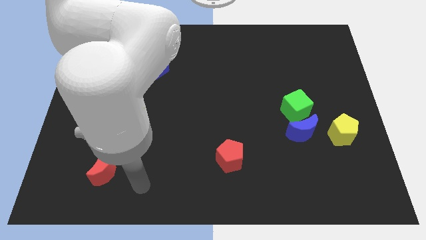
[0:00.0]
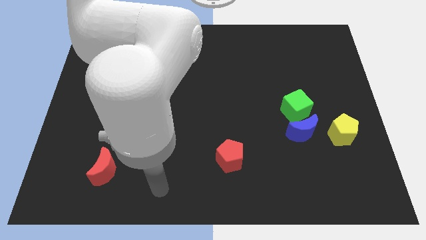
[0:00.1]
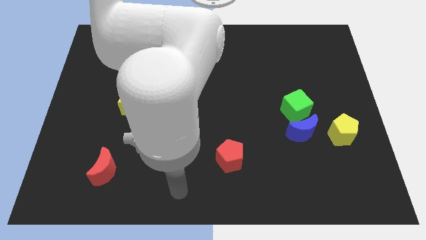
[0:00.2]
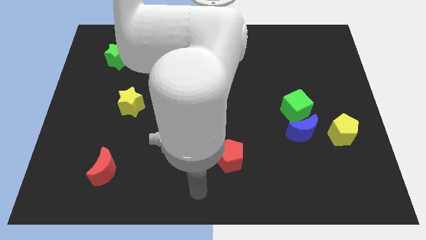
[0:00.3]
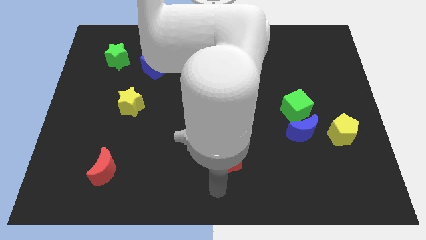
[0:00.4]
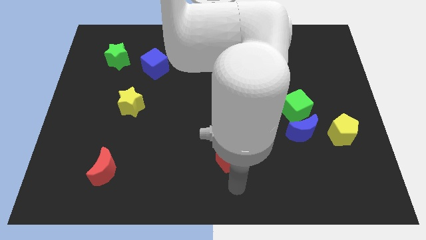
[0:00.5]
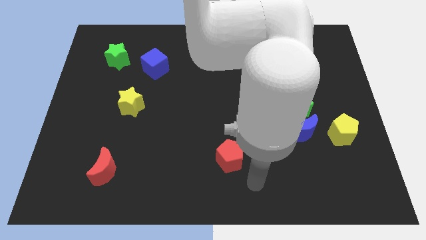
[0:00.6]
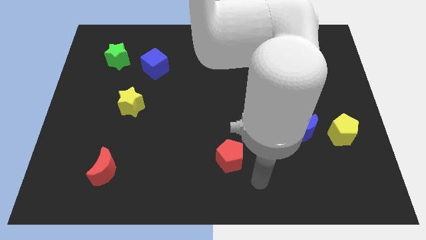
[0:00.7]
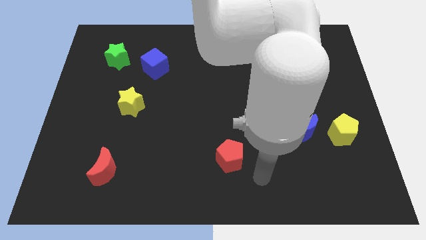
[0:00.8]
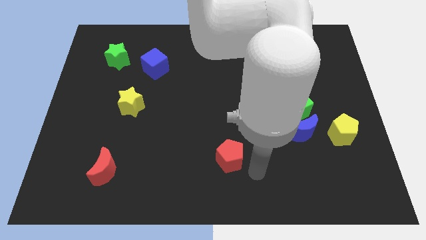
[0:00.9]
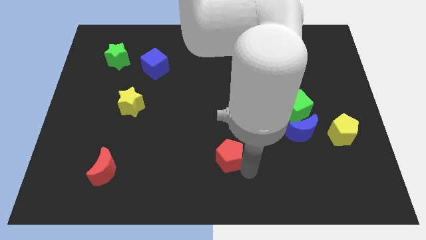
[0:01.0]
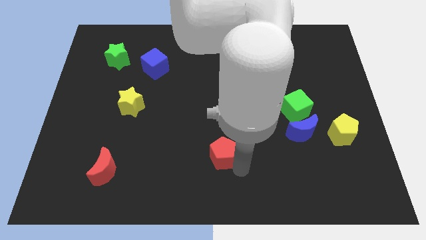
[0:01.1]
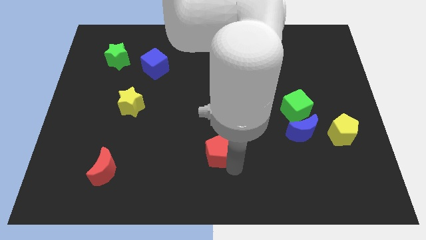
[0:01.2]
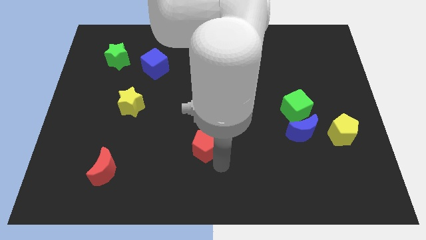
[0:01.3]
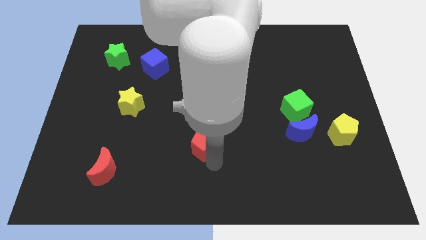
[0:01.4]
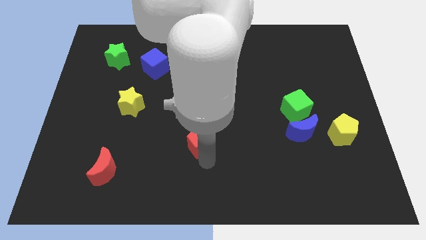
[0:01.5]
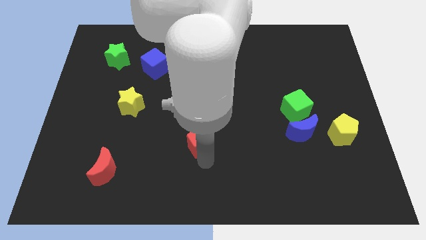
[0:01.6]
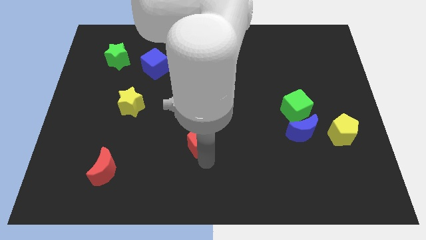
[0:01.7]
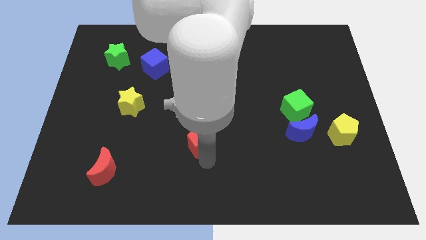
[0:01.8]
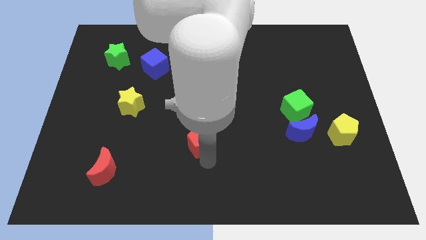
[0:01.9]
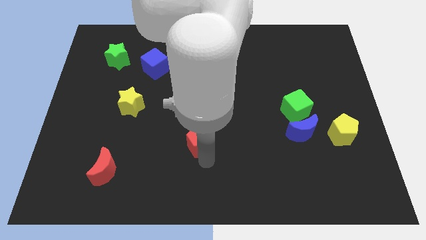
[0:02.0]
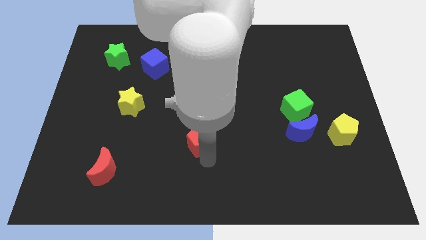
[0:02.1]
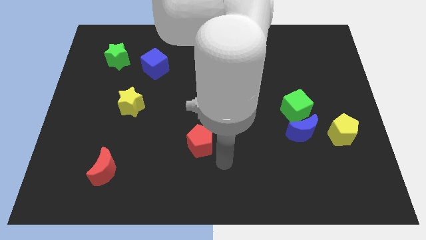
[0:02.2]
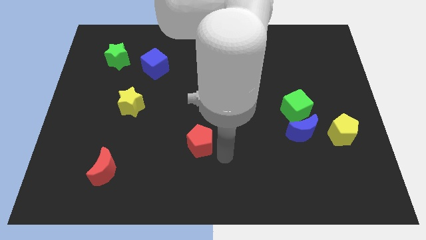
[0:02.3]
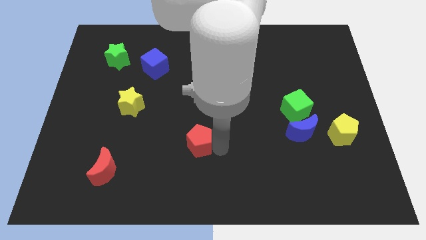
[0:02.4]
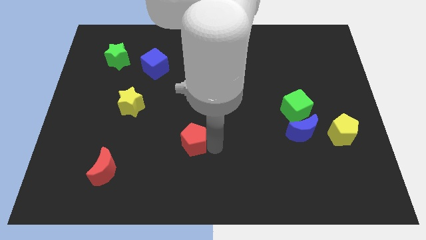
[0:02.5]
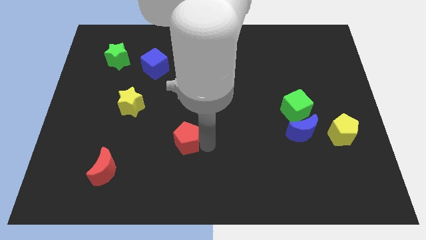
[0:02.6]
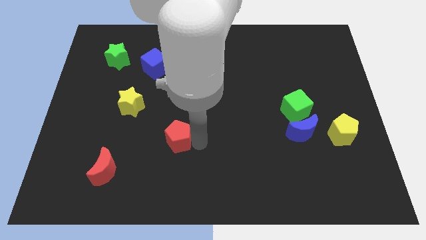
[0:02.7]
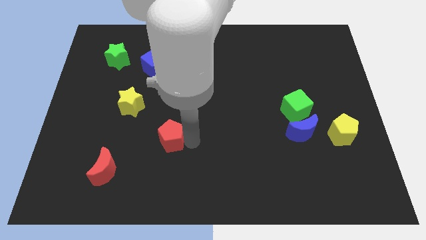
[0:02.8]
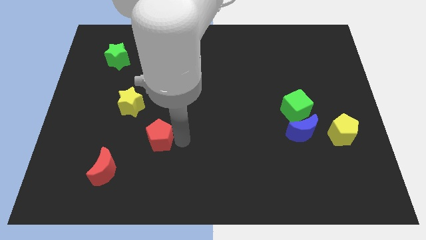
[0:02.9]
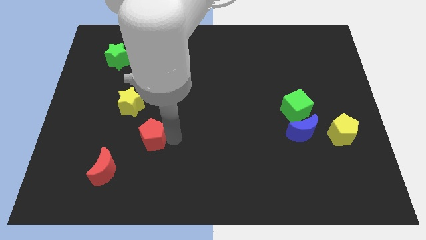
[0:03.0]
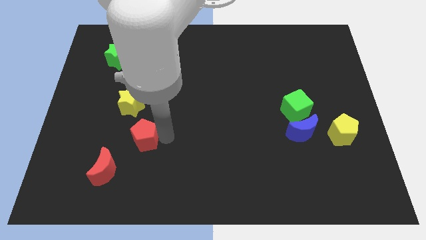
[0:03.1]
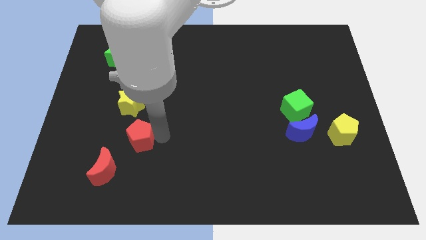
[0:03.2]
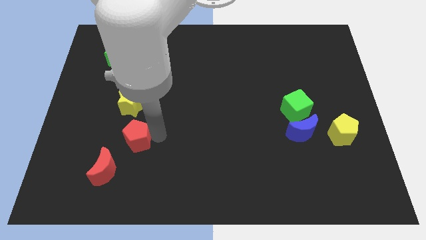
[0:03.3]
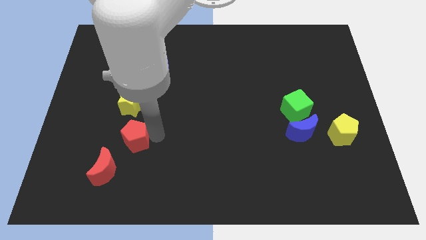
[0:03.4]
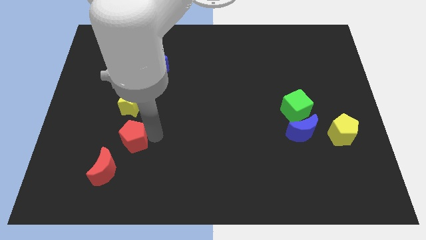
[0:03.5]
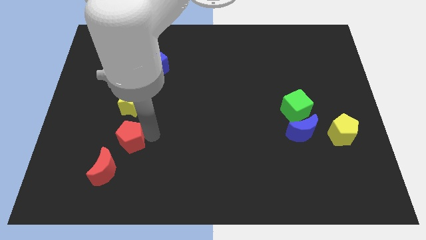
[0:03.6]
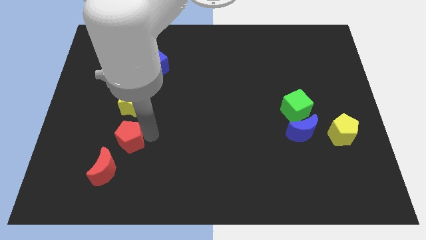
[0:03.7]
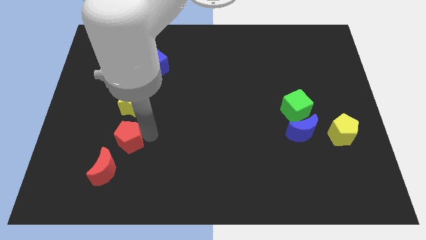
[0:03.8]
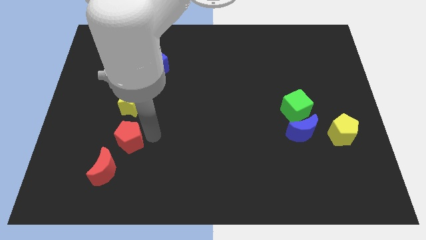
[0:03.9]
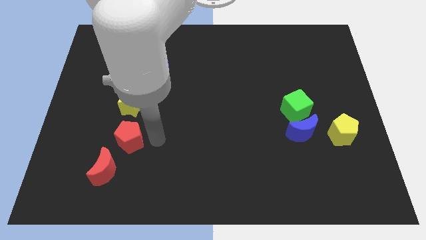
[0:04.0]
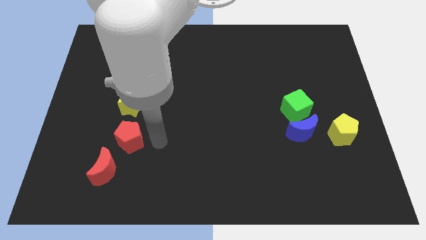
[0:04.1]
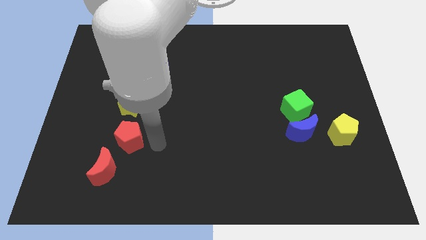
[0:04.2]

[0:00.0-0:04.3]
move the red pentagon to the top side of red crescent

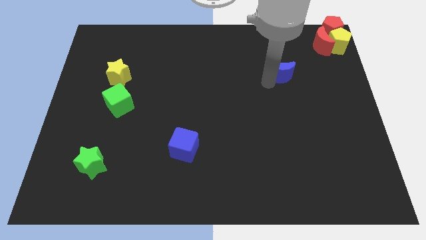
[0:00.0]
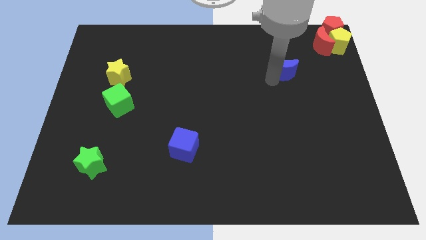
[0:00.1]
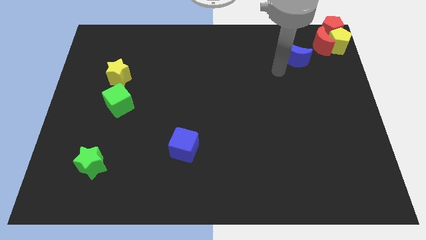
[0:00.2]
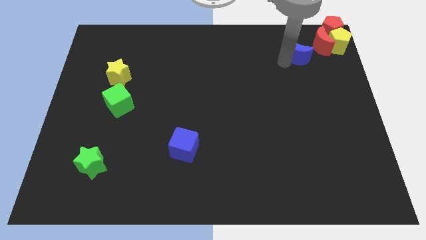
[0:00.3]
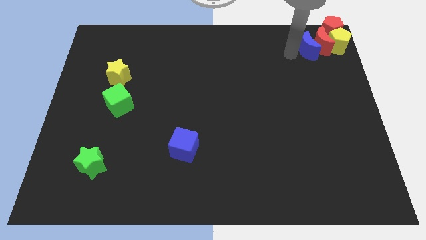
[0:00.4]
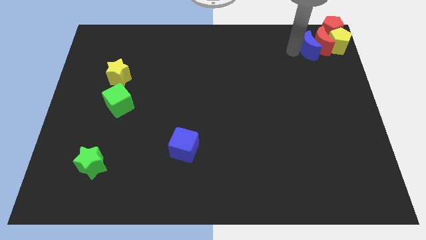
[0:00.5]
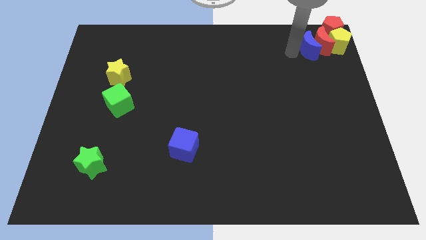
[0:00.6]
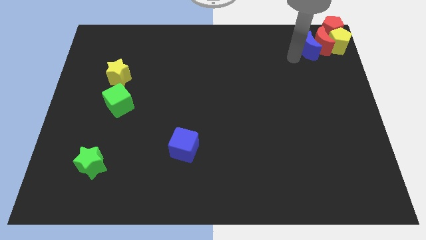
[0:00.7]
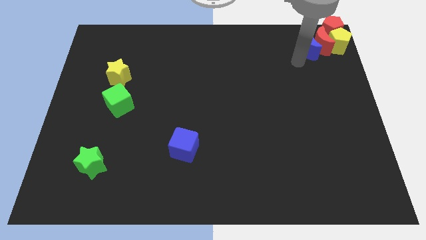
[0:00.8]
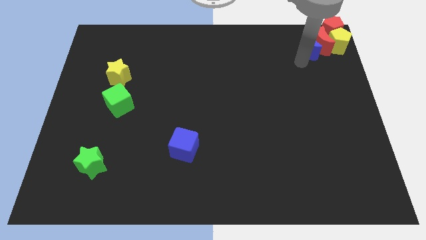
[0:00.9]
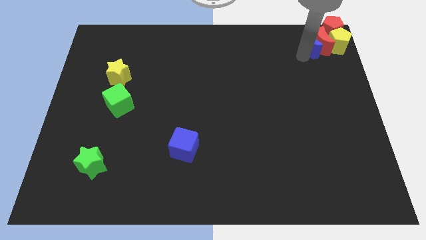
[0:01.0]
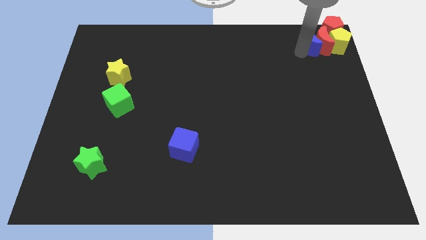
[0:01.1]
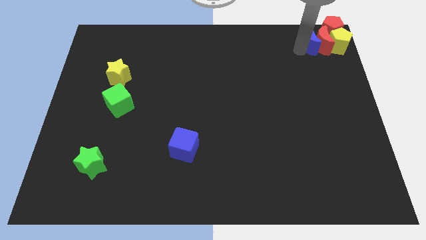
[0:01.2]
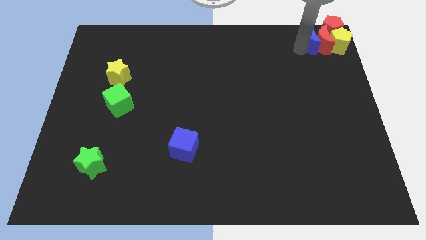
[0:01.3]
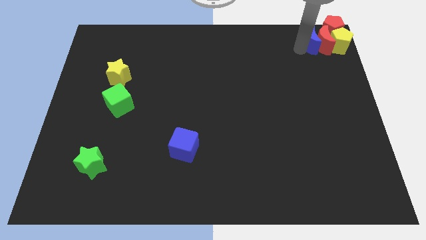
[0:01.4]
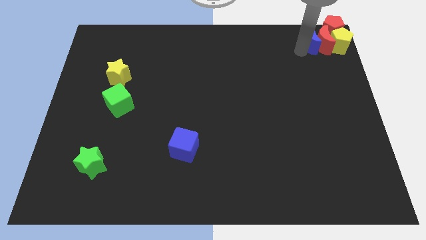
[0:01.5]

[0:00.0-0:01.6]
push the blue crescent to the left of the red crescent

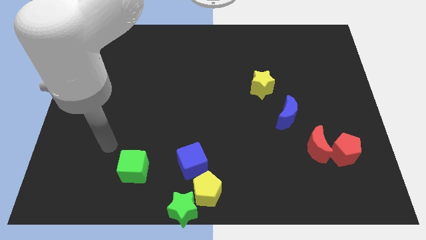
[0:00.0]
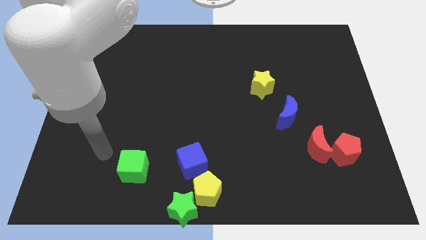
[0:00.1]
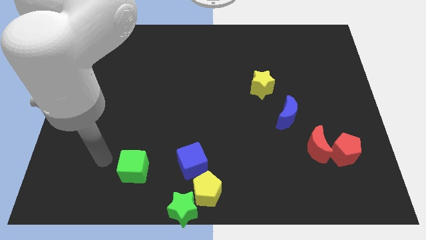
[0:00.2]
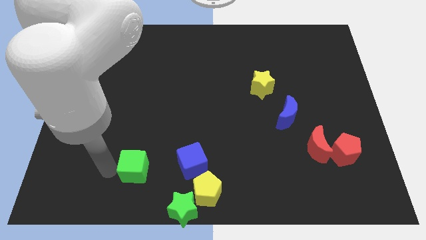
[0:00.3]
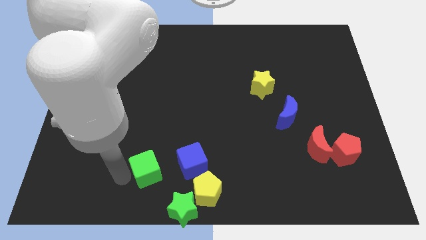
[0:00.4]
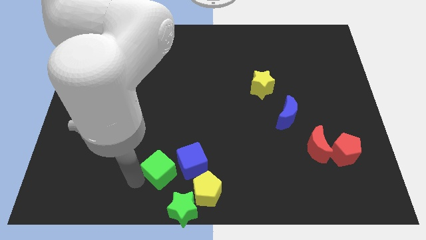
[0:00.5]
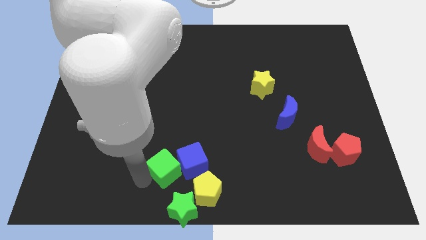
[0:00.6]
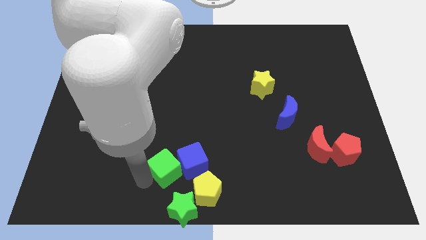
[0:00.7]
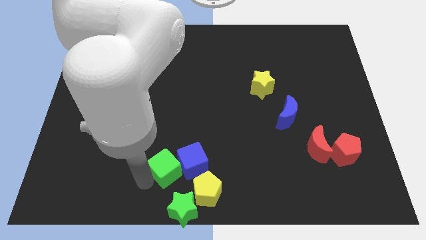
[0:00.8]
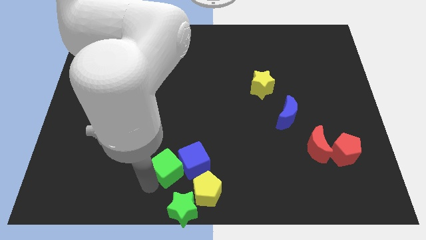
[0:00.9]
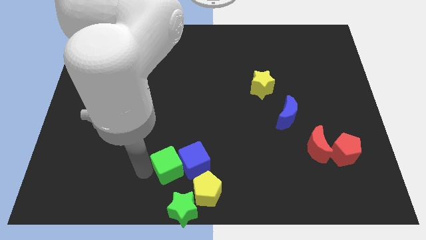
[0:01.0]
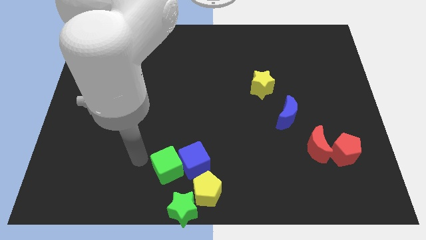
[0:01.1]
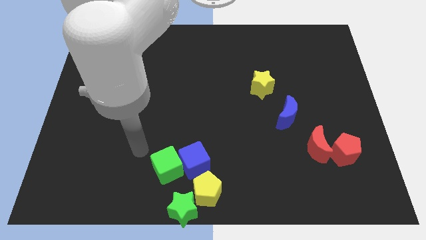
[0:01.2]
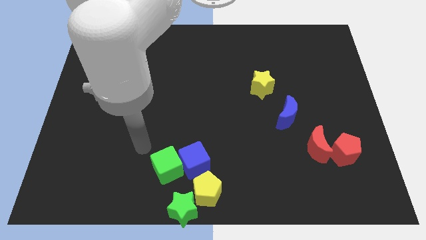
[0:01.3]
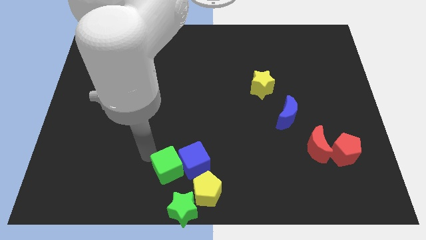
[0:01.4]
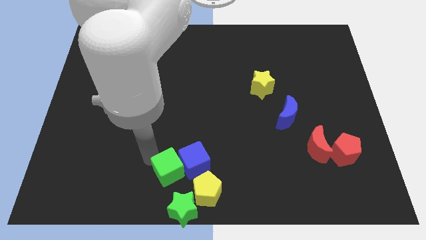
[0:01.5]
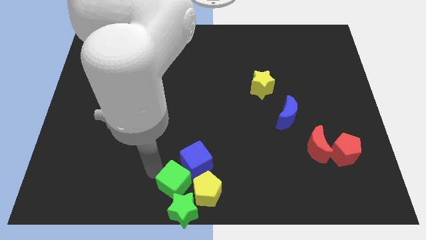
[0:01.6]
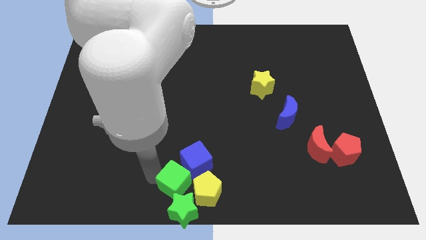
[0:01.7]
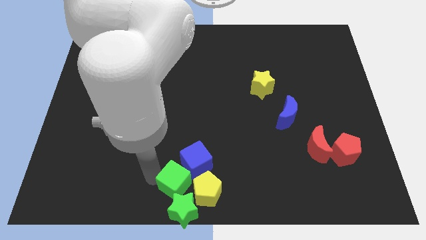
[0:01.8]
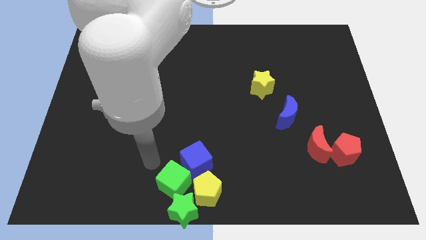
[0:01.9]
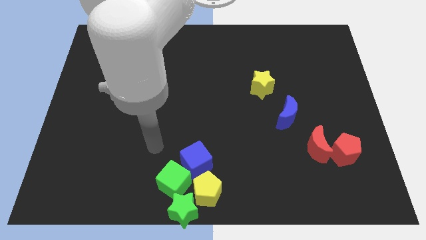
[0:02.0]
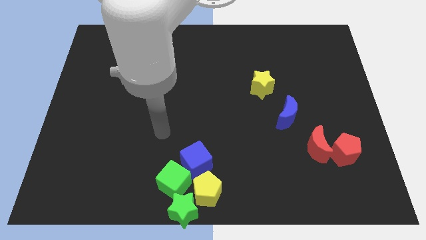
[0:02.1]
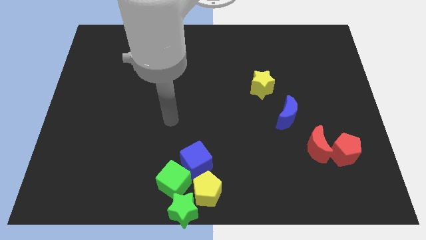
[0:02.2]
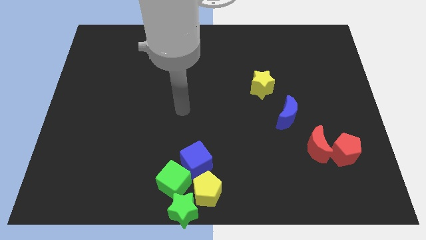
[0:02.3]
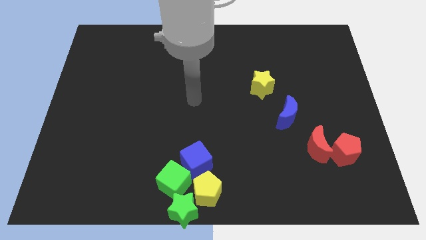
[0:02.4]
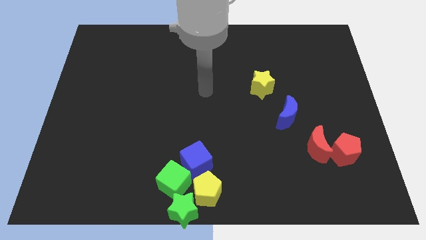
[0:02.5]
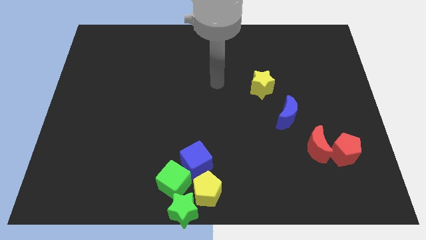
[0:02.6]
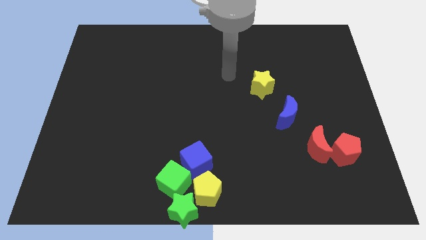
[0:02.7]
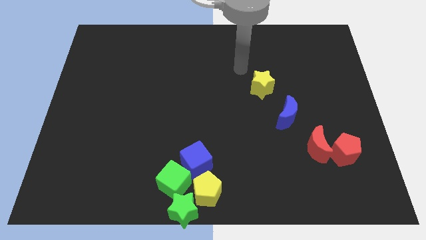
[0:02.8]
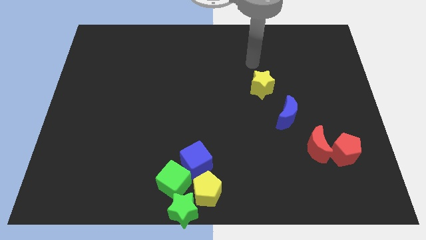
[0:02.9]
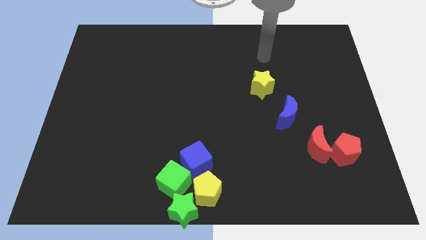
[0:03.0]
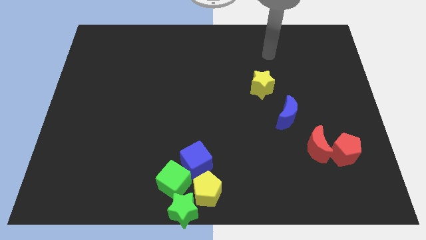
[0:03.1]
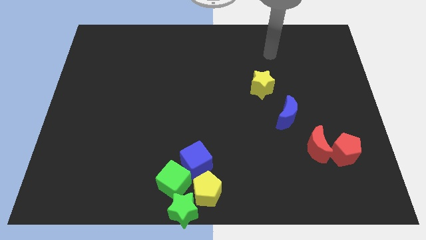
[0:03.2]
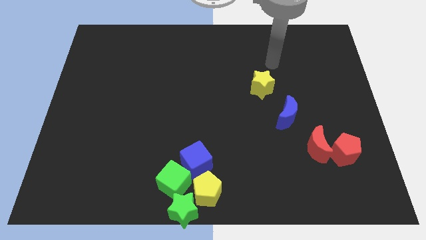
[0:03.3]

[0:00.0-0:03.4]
place the green cube on top of the green star
